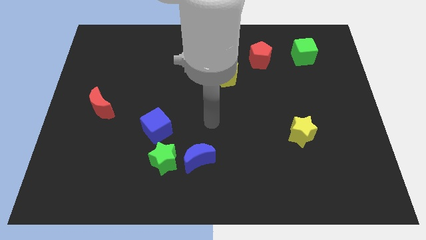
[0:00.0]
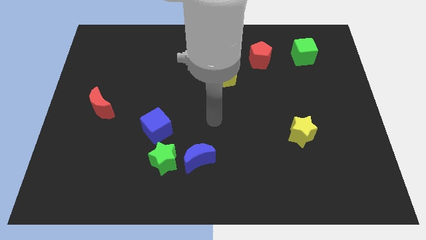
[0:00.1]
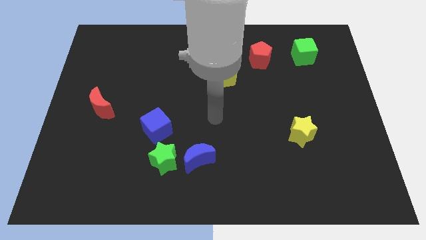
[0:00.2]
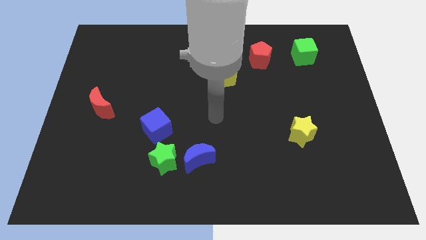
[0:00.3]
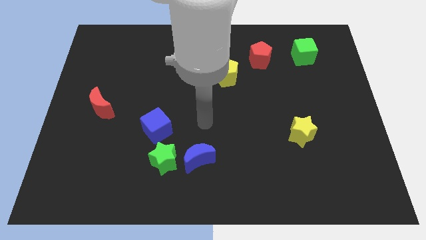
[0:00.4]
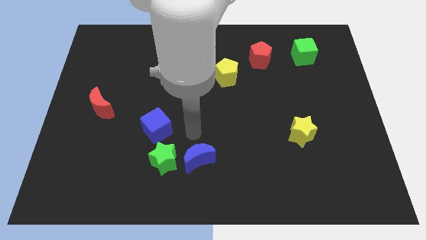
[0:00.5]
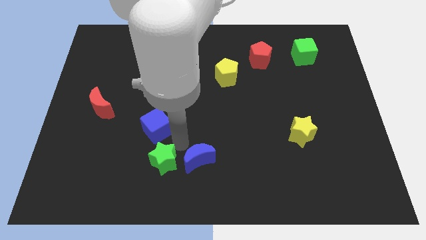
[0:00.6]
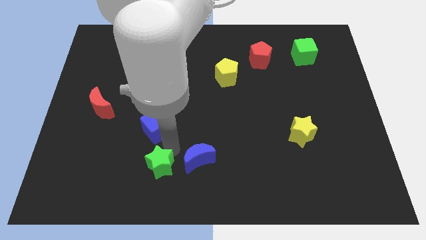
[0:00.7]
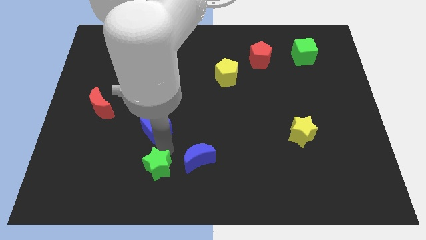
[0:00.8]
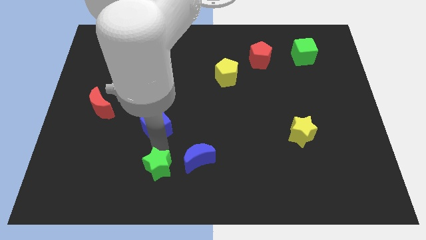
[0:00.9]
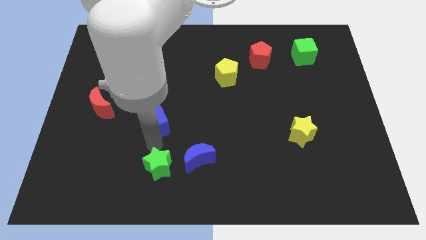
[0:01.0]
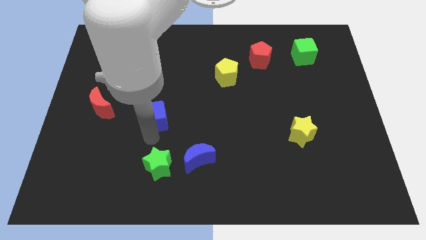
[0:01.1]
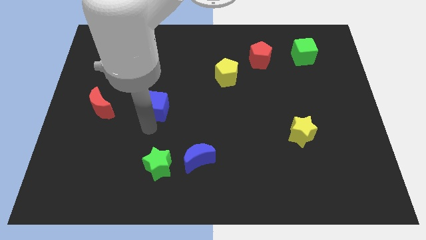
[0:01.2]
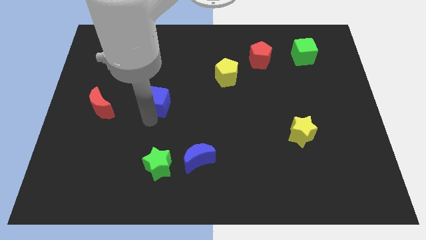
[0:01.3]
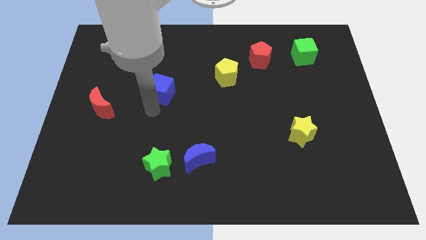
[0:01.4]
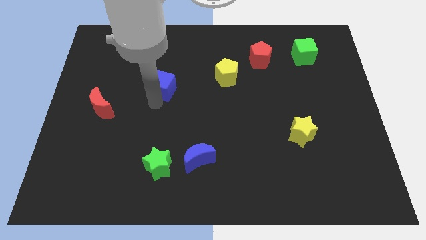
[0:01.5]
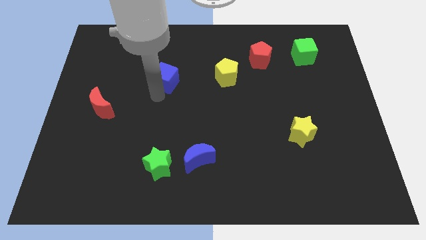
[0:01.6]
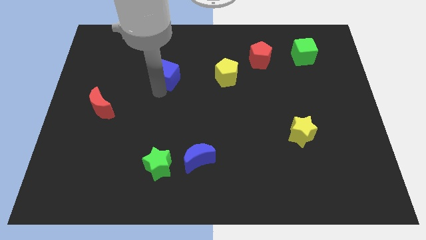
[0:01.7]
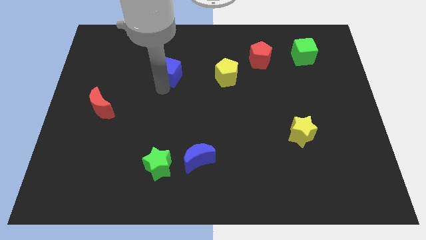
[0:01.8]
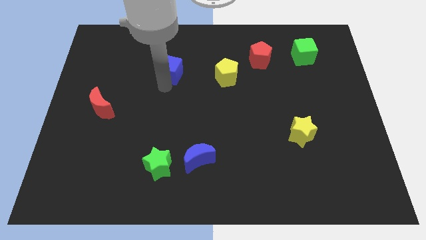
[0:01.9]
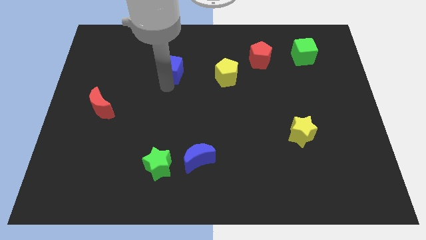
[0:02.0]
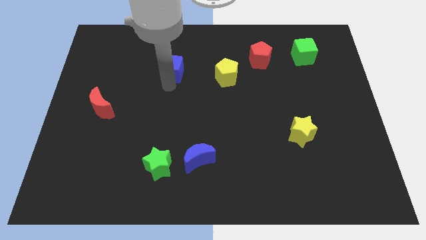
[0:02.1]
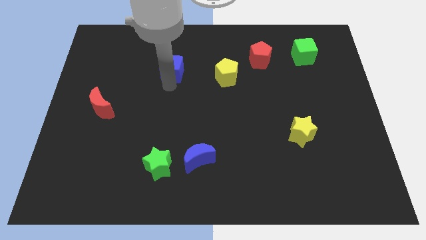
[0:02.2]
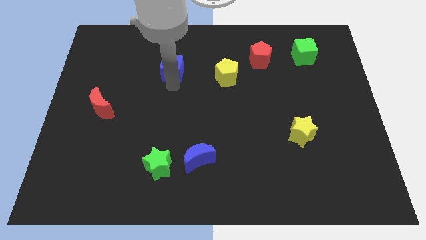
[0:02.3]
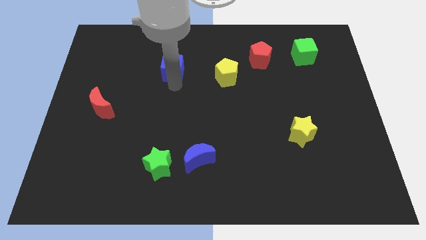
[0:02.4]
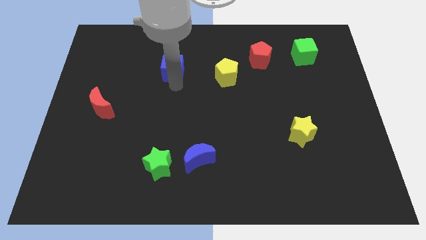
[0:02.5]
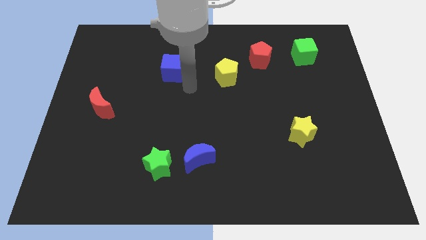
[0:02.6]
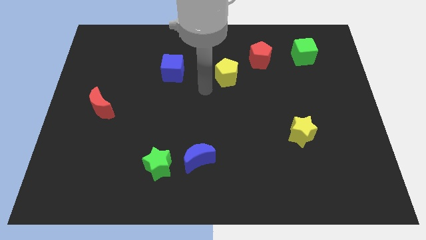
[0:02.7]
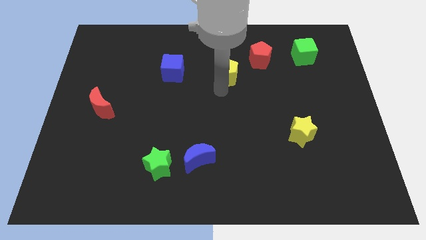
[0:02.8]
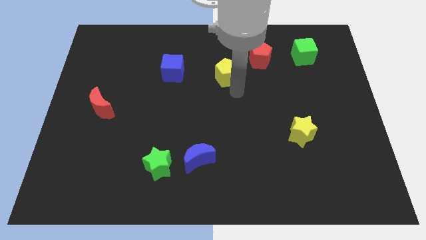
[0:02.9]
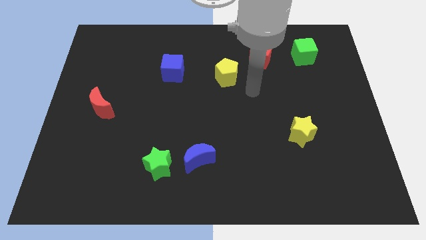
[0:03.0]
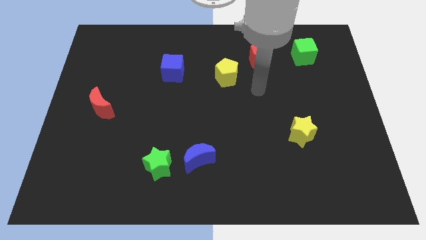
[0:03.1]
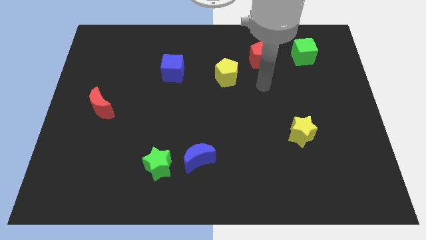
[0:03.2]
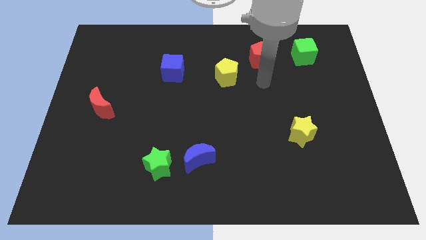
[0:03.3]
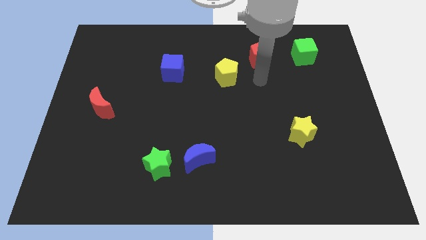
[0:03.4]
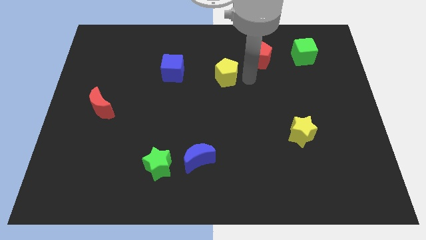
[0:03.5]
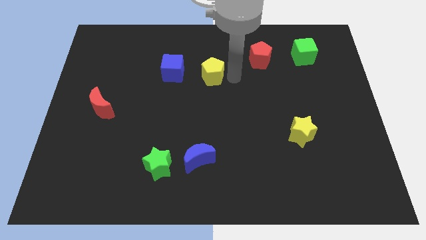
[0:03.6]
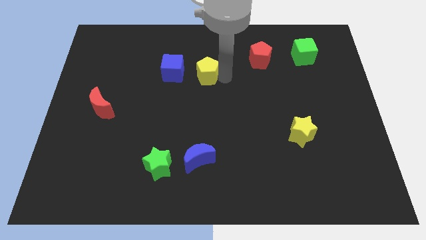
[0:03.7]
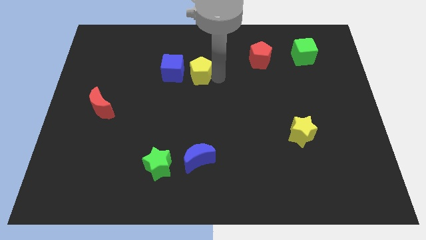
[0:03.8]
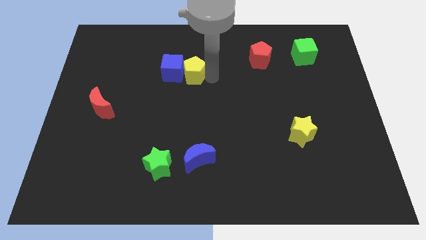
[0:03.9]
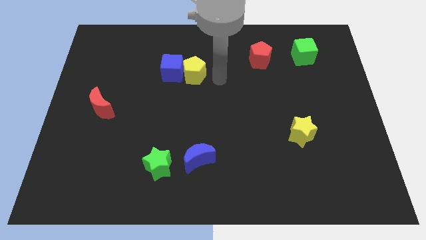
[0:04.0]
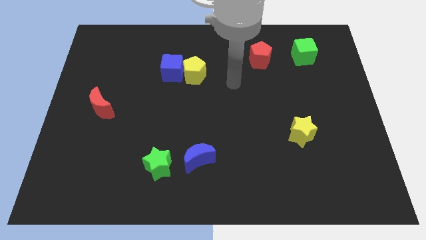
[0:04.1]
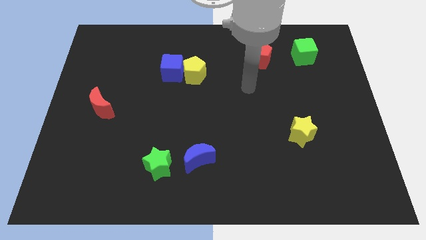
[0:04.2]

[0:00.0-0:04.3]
move the blue cube to the left side of the yellow pentagon

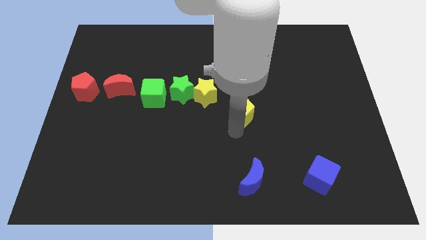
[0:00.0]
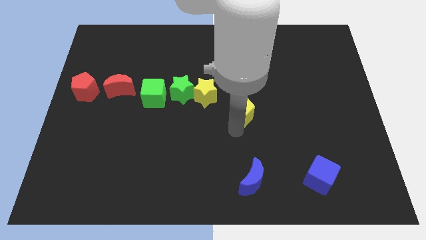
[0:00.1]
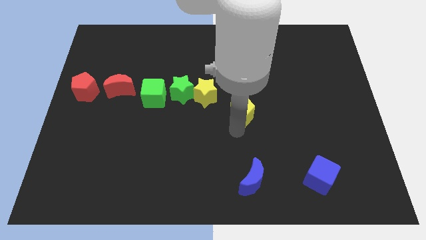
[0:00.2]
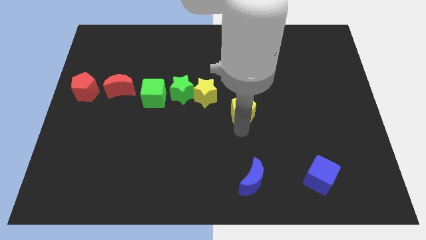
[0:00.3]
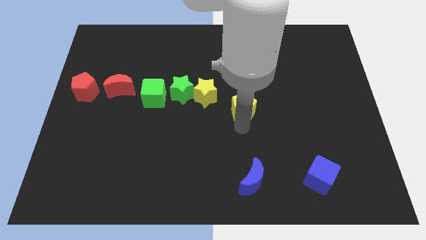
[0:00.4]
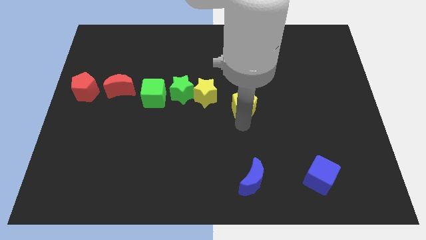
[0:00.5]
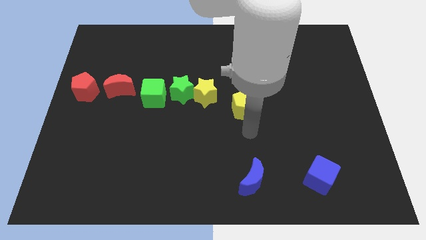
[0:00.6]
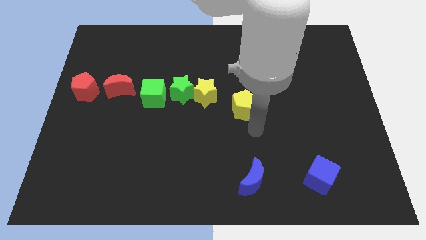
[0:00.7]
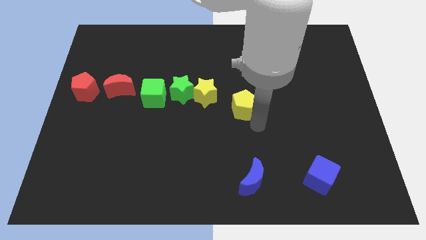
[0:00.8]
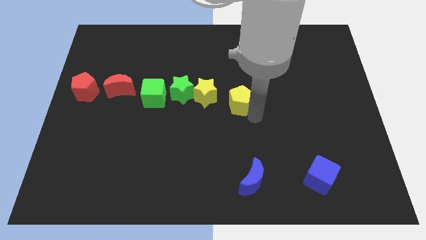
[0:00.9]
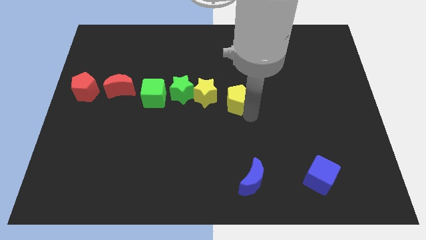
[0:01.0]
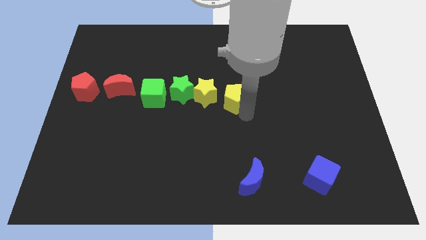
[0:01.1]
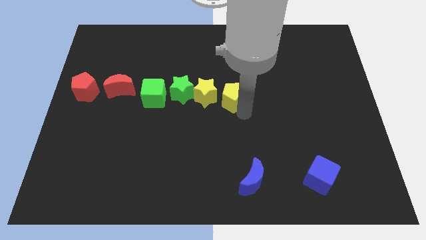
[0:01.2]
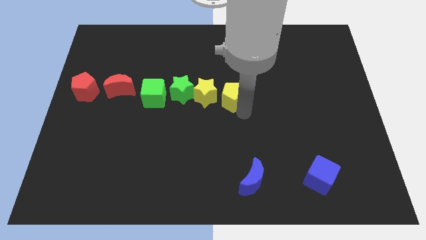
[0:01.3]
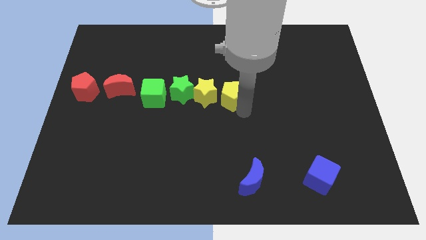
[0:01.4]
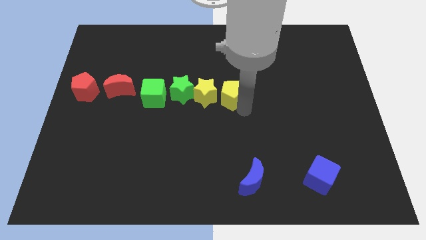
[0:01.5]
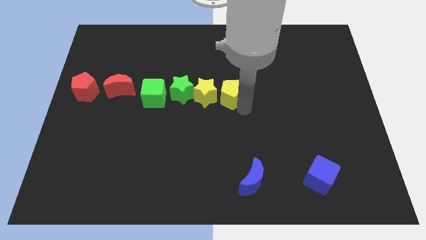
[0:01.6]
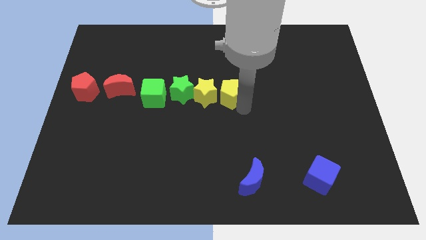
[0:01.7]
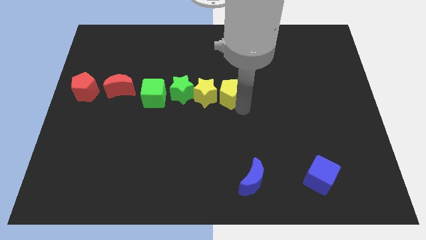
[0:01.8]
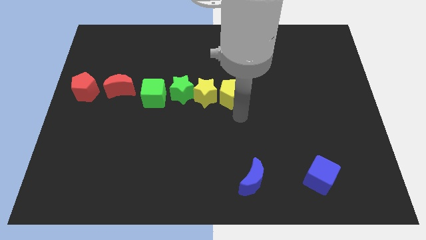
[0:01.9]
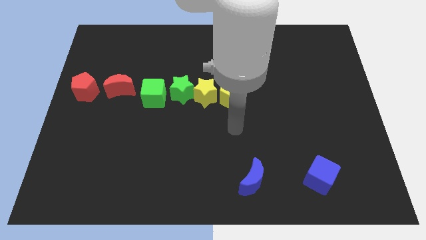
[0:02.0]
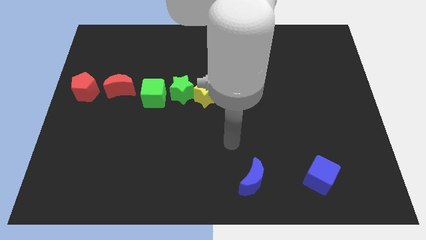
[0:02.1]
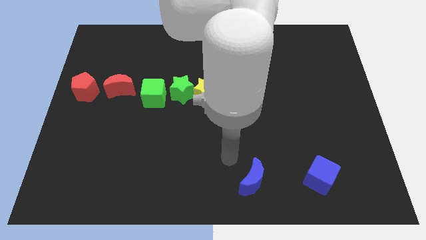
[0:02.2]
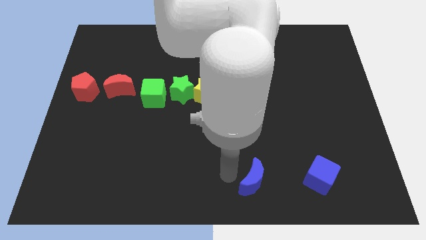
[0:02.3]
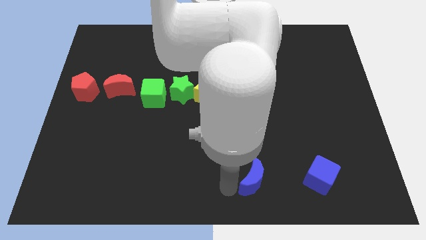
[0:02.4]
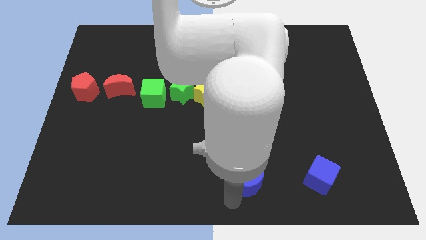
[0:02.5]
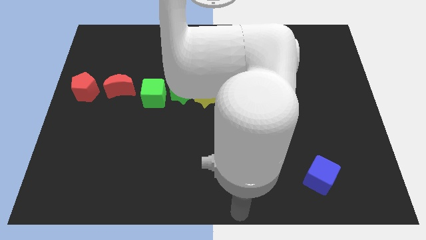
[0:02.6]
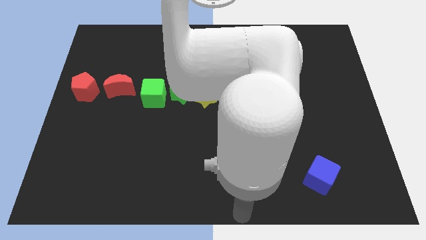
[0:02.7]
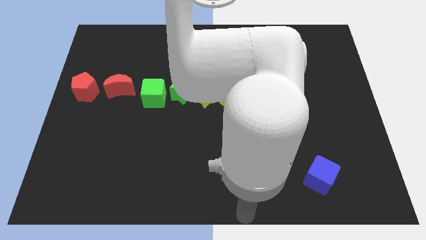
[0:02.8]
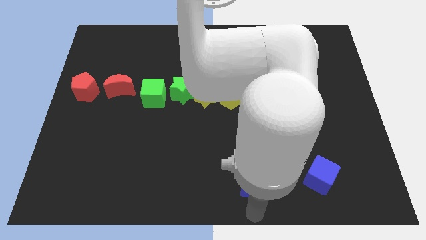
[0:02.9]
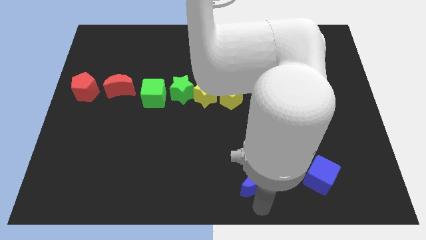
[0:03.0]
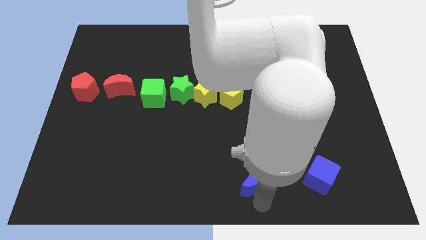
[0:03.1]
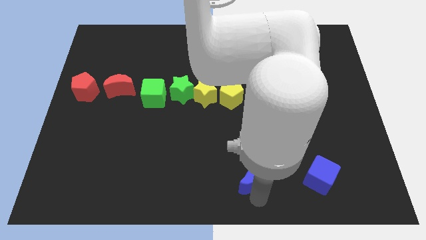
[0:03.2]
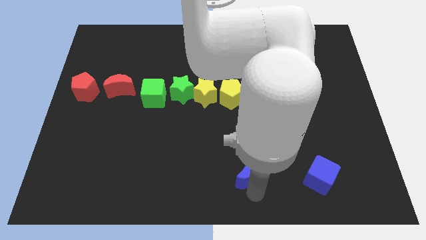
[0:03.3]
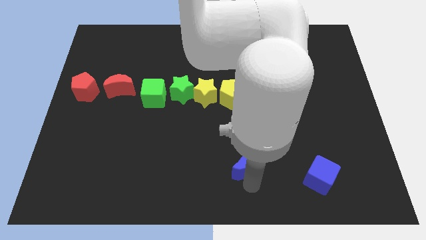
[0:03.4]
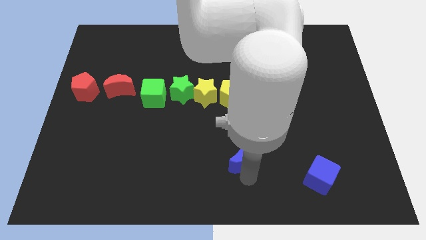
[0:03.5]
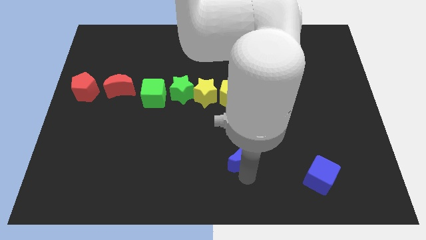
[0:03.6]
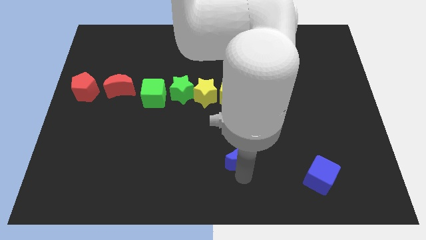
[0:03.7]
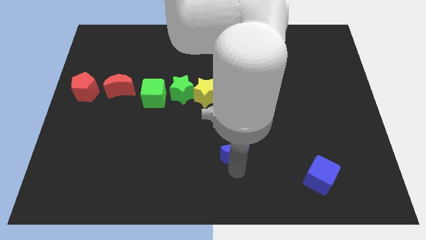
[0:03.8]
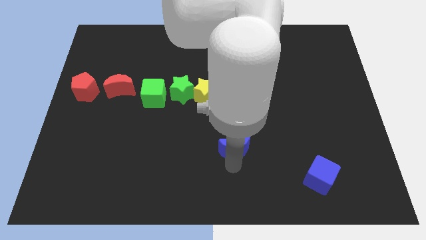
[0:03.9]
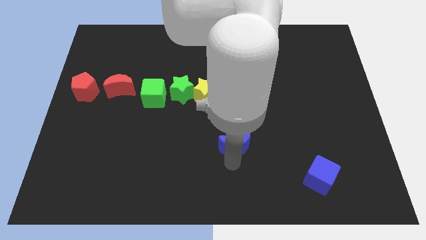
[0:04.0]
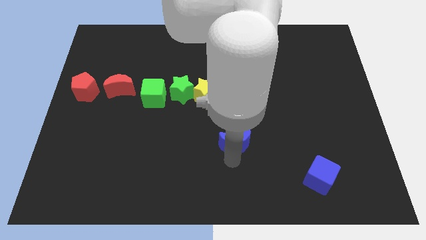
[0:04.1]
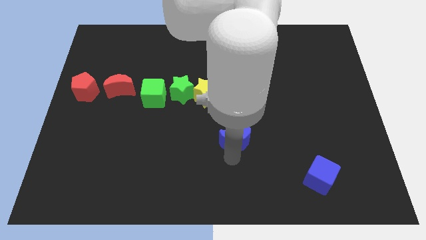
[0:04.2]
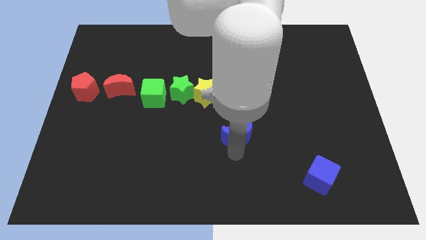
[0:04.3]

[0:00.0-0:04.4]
move the blue moon and yellow pentagon vertical to each other

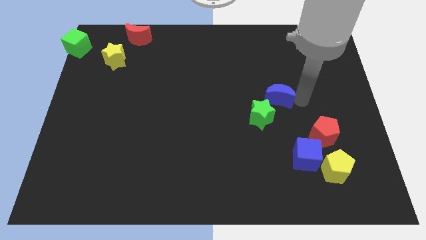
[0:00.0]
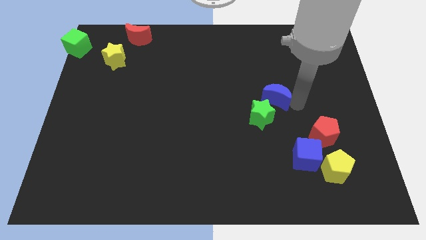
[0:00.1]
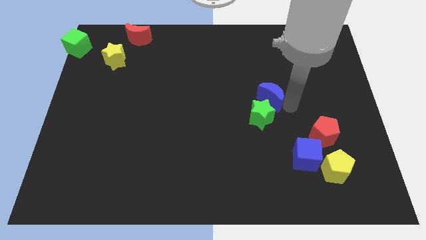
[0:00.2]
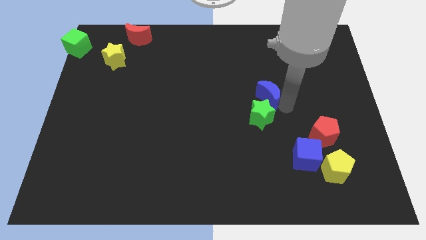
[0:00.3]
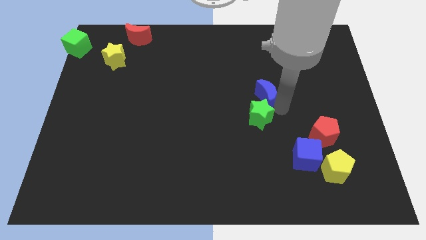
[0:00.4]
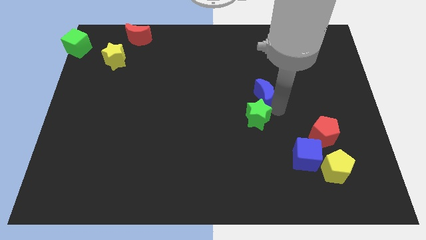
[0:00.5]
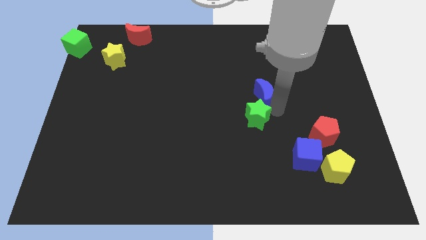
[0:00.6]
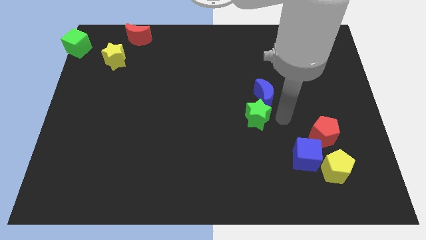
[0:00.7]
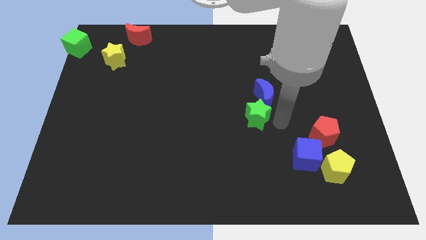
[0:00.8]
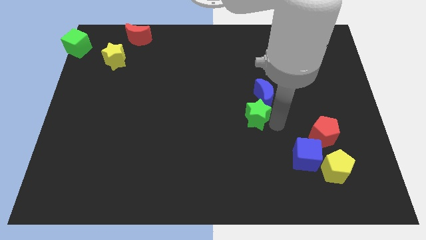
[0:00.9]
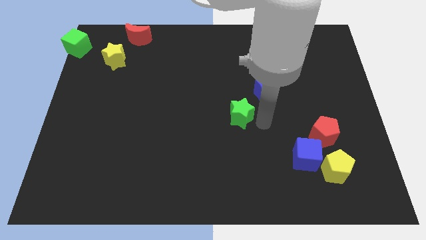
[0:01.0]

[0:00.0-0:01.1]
separate green star and blue moon
